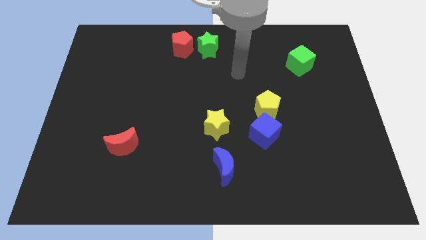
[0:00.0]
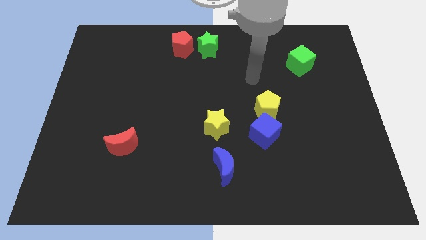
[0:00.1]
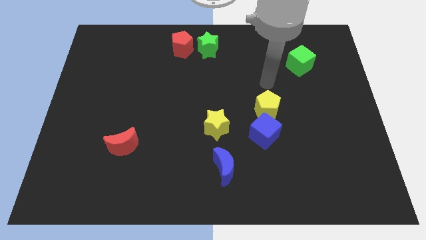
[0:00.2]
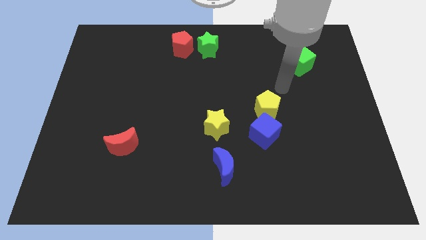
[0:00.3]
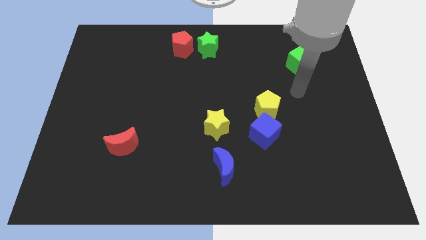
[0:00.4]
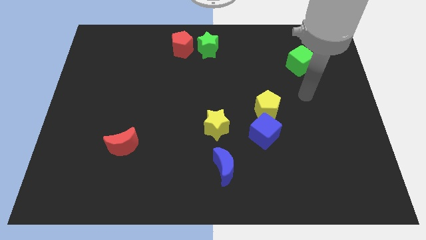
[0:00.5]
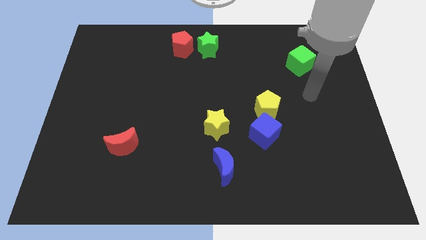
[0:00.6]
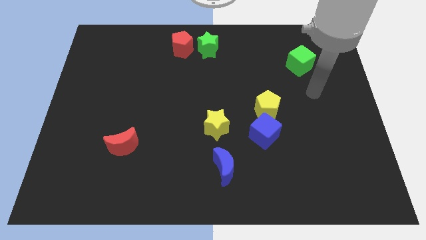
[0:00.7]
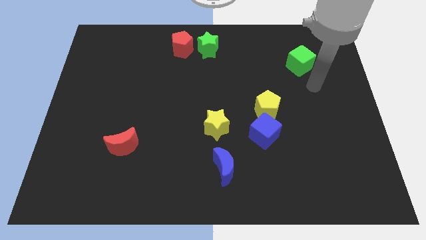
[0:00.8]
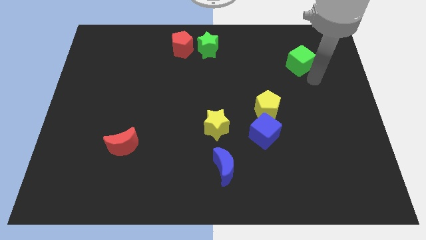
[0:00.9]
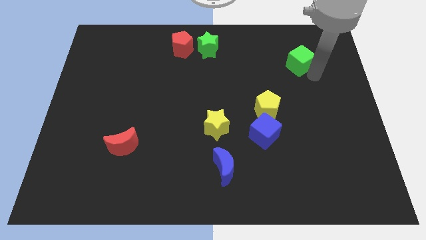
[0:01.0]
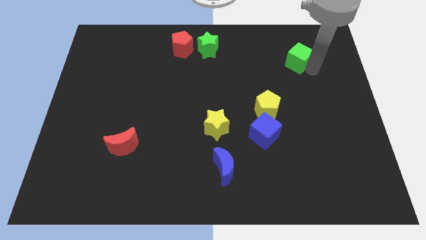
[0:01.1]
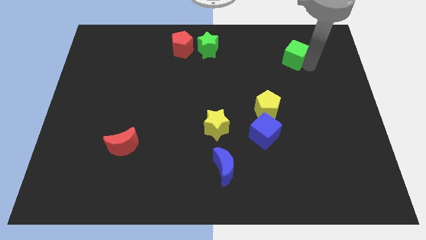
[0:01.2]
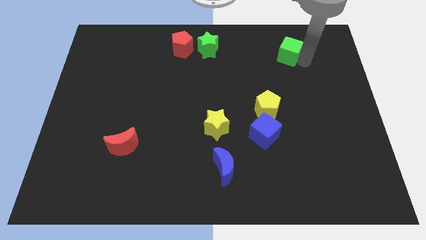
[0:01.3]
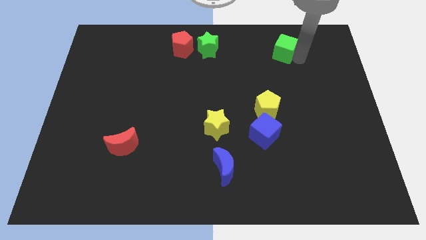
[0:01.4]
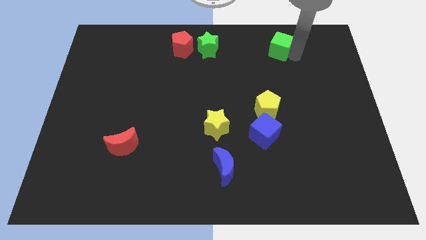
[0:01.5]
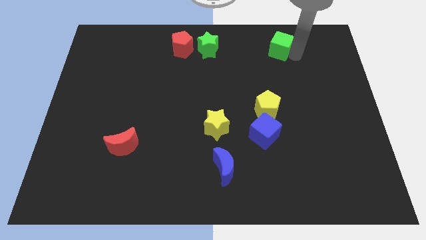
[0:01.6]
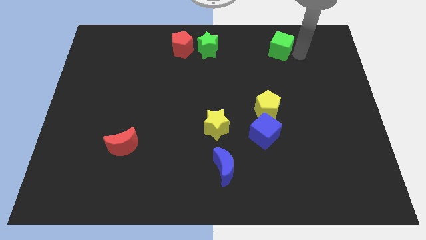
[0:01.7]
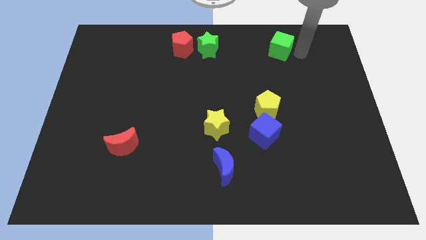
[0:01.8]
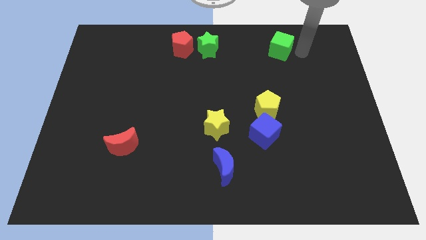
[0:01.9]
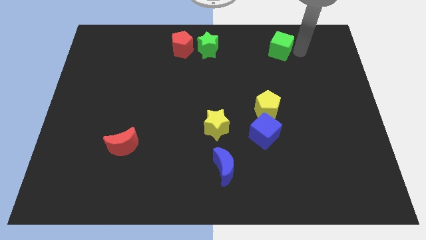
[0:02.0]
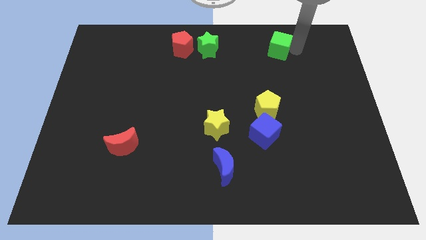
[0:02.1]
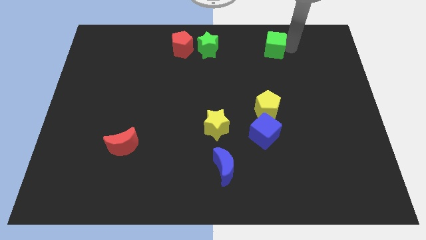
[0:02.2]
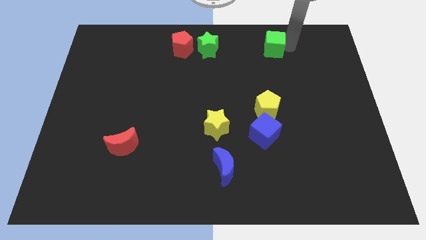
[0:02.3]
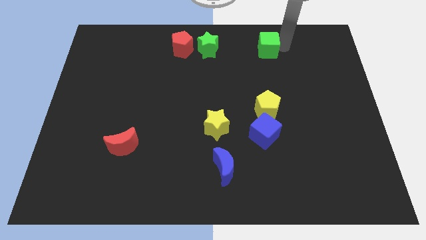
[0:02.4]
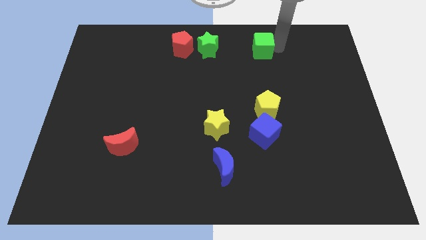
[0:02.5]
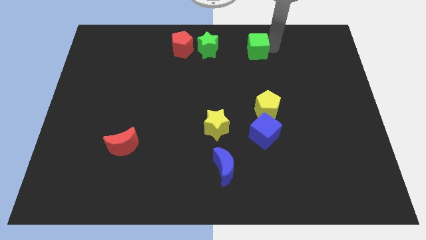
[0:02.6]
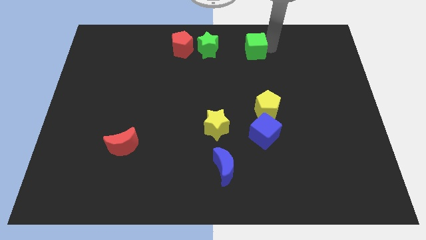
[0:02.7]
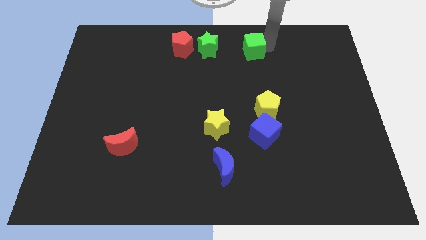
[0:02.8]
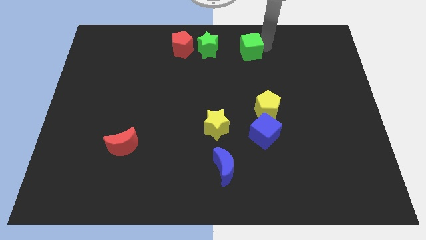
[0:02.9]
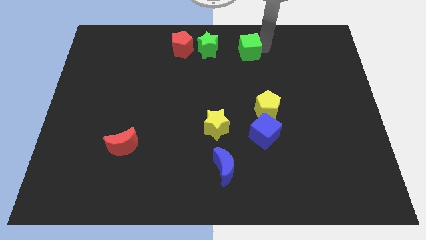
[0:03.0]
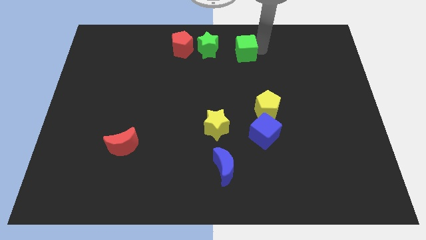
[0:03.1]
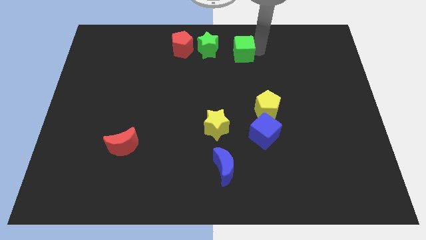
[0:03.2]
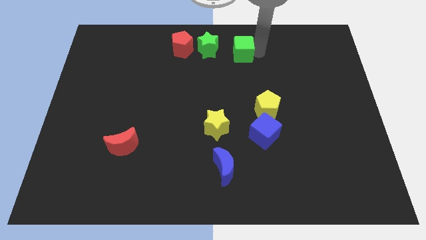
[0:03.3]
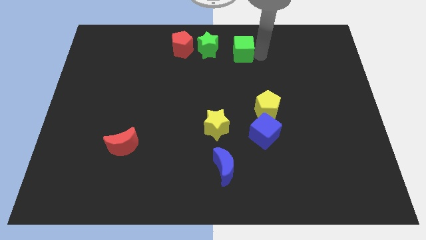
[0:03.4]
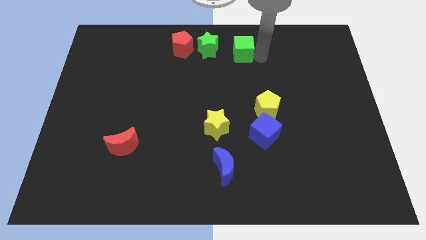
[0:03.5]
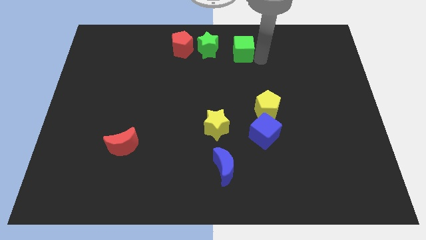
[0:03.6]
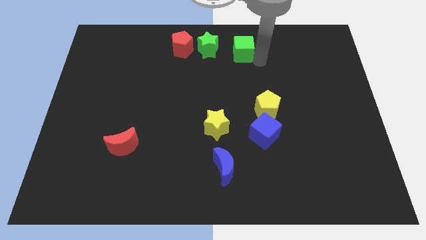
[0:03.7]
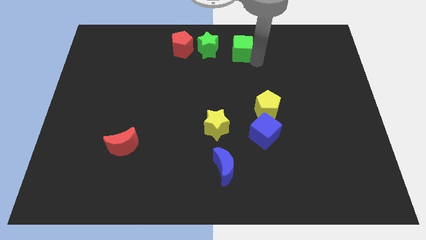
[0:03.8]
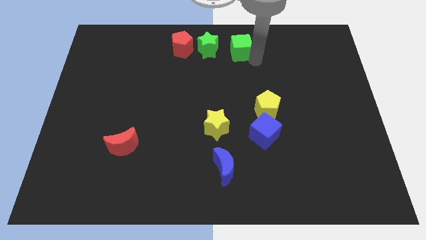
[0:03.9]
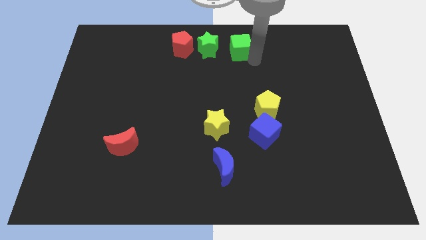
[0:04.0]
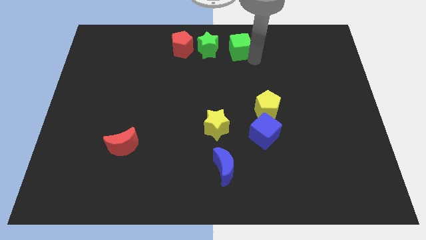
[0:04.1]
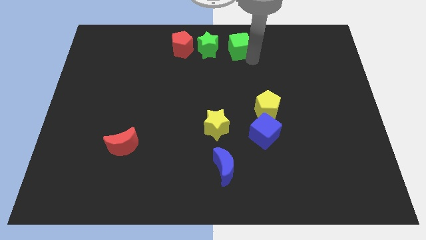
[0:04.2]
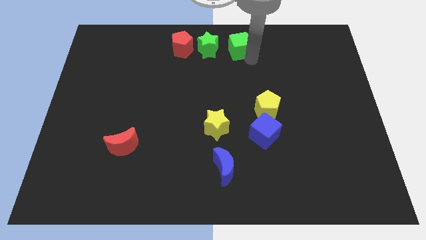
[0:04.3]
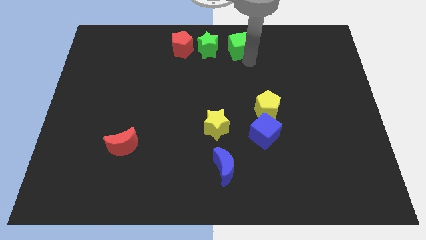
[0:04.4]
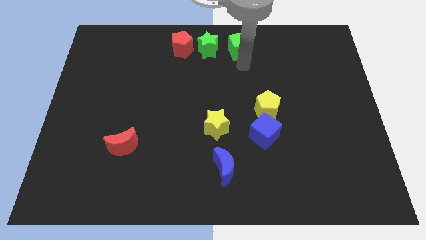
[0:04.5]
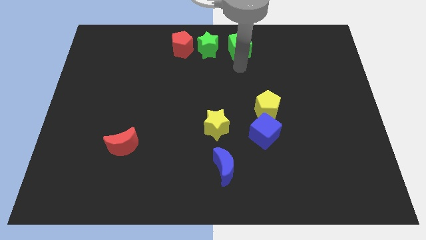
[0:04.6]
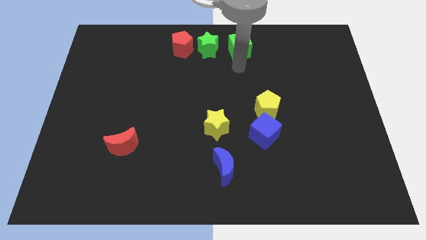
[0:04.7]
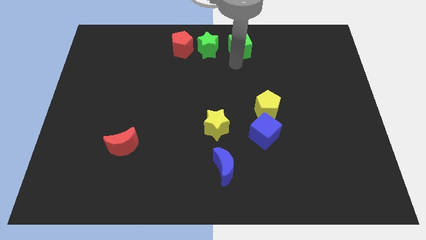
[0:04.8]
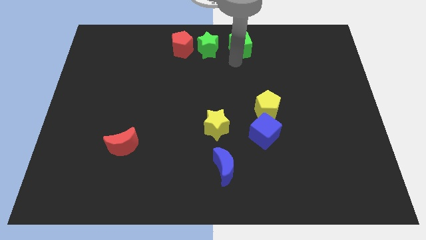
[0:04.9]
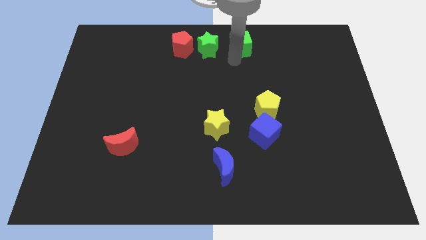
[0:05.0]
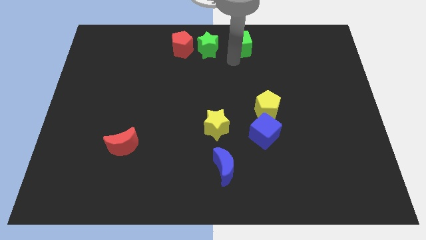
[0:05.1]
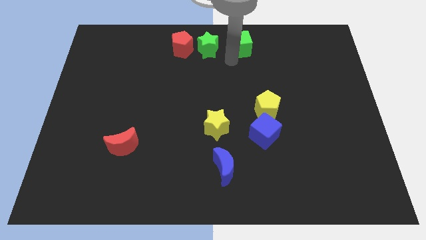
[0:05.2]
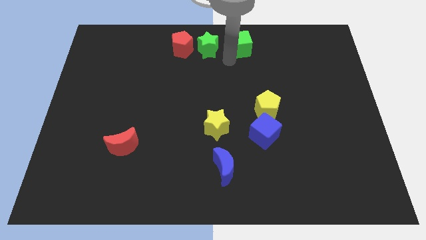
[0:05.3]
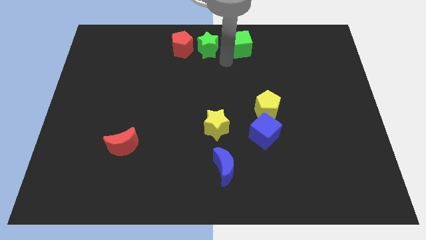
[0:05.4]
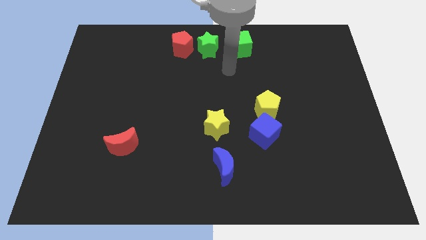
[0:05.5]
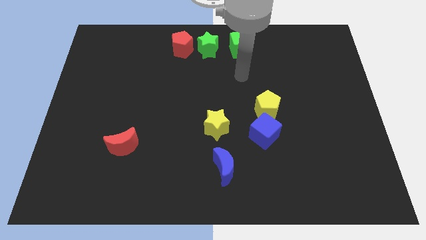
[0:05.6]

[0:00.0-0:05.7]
place the green cube right to the green star

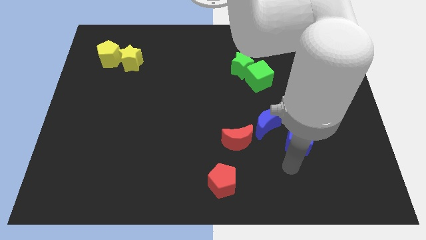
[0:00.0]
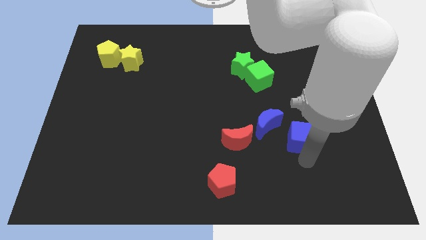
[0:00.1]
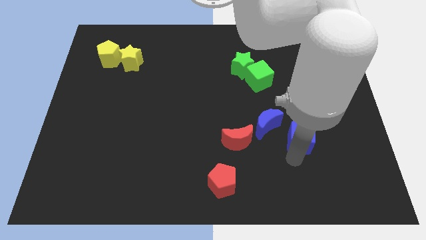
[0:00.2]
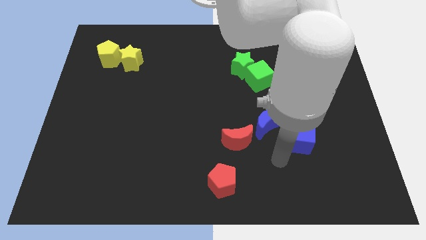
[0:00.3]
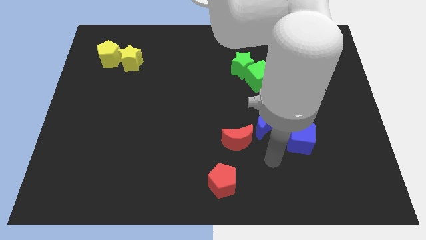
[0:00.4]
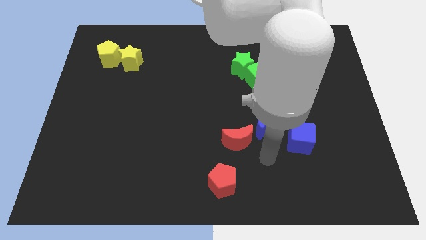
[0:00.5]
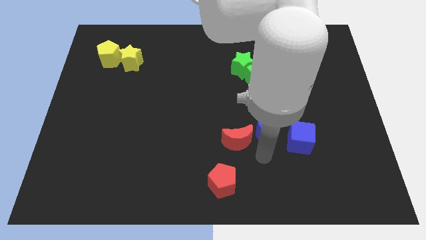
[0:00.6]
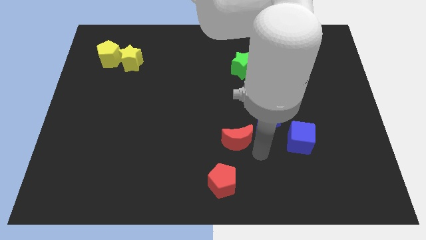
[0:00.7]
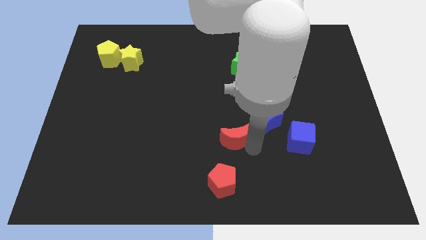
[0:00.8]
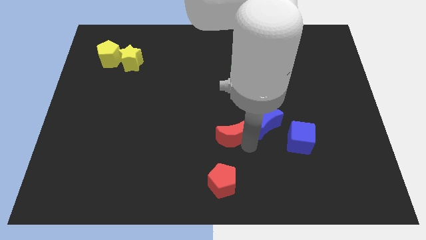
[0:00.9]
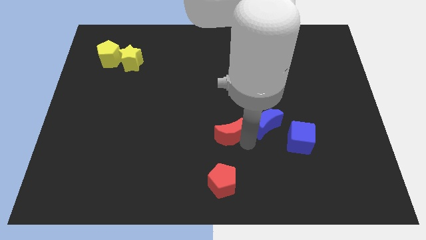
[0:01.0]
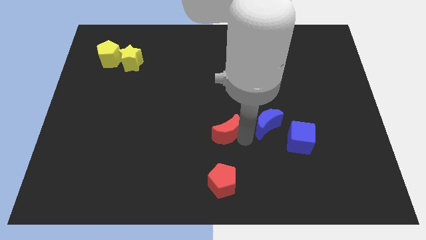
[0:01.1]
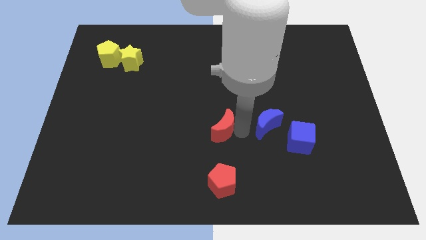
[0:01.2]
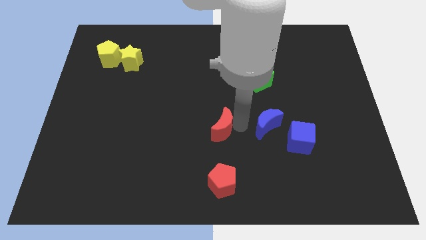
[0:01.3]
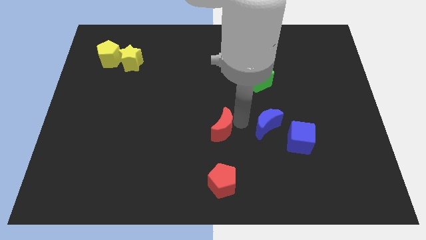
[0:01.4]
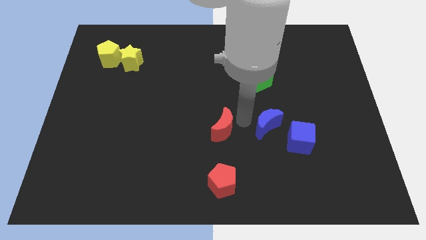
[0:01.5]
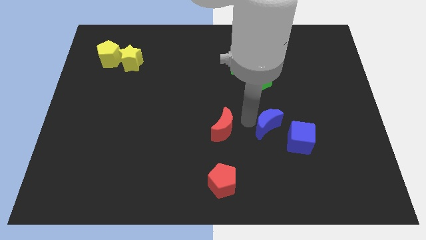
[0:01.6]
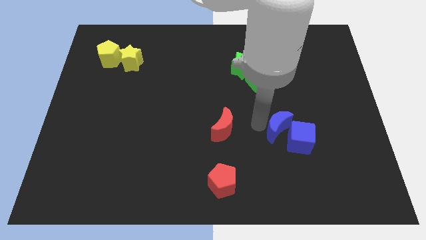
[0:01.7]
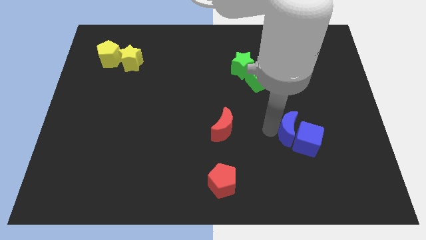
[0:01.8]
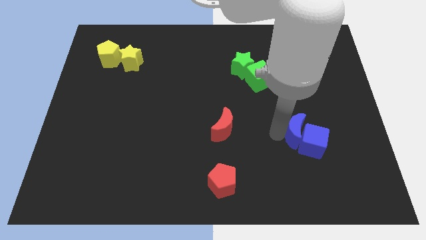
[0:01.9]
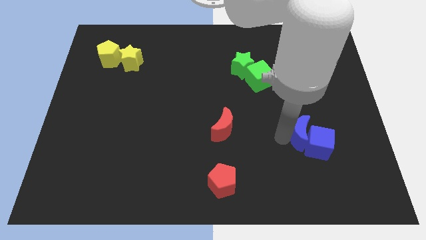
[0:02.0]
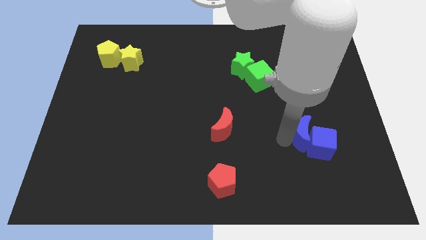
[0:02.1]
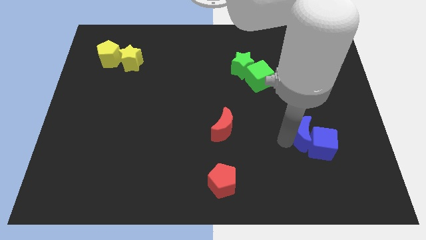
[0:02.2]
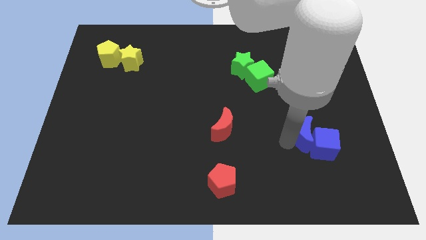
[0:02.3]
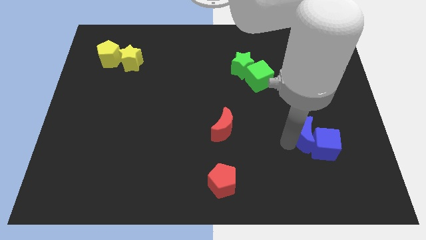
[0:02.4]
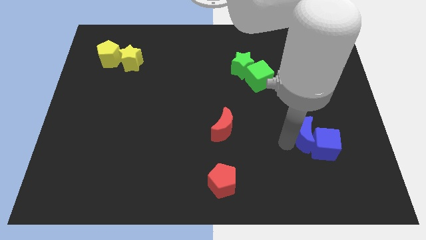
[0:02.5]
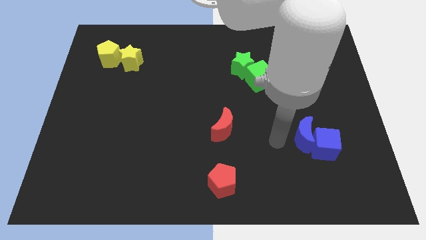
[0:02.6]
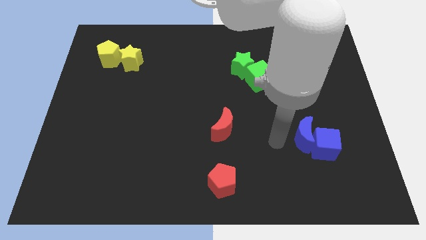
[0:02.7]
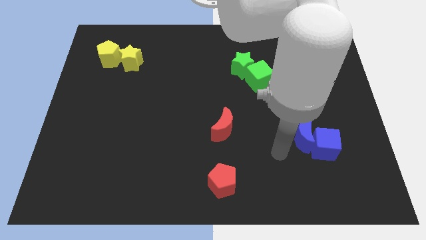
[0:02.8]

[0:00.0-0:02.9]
move the blue crescent into the blue cube to the bottom right

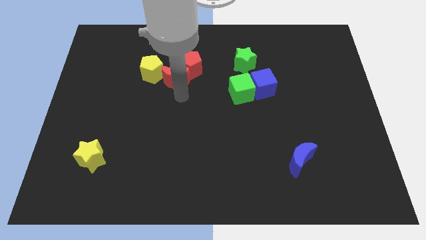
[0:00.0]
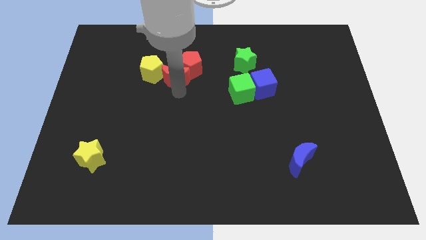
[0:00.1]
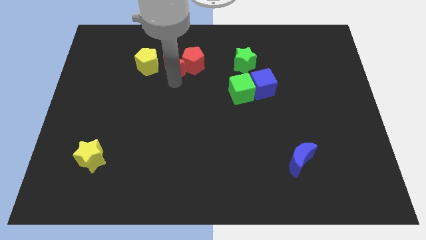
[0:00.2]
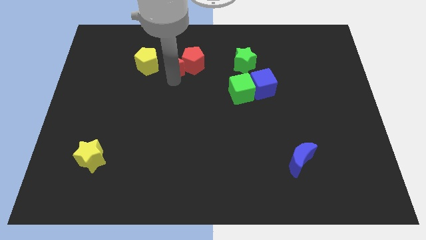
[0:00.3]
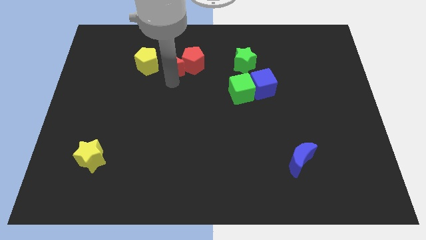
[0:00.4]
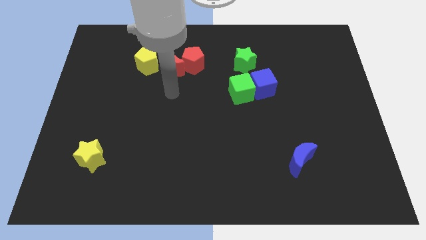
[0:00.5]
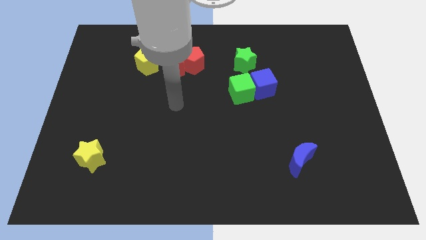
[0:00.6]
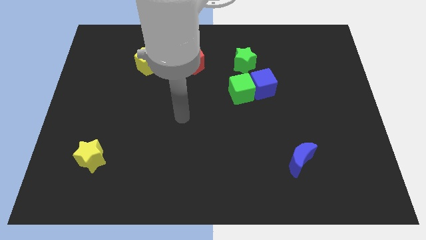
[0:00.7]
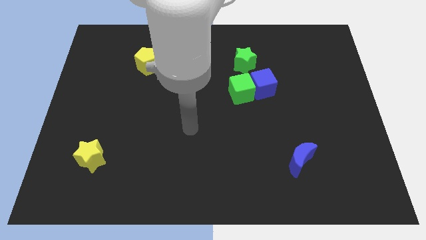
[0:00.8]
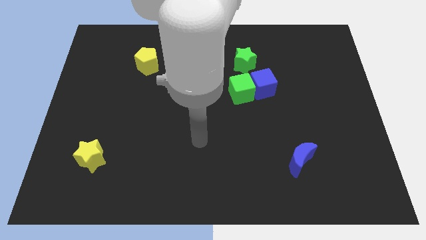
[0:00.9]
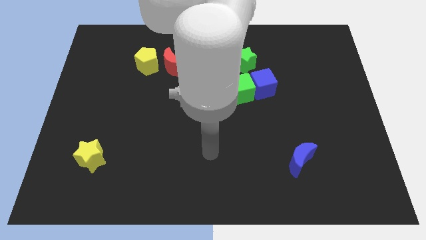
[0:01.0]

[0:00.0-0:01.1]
place the red moon in between the red pentagon and yellow pentagon
